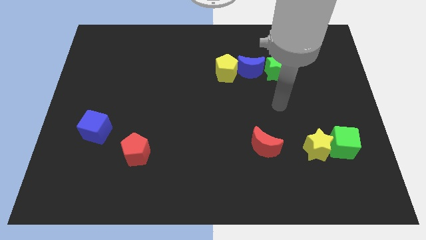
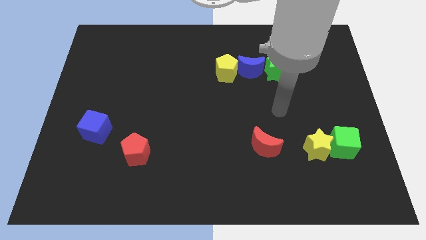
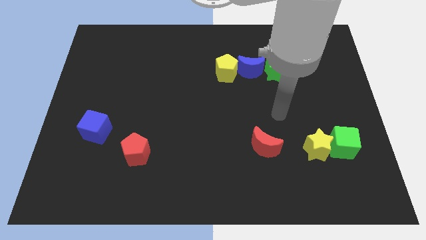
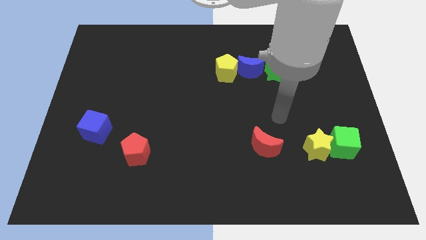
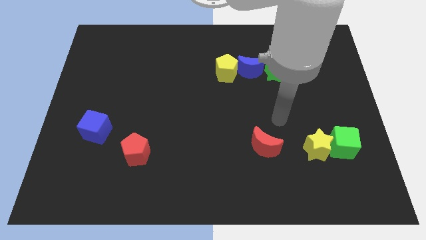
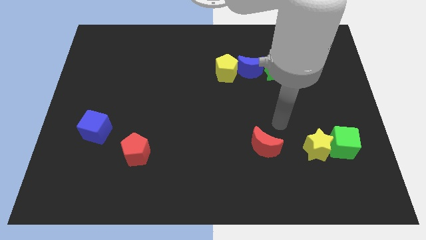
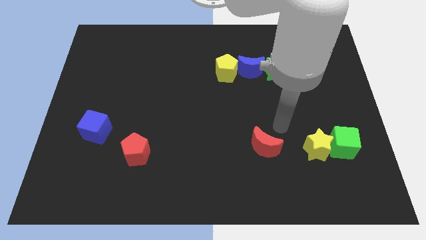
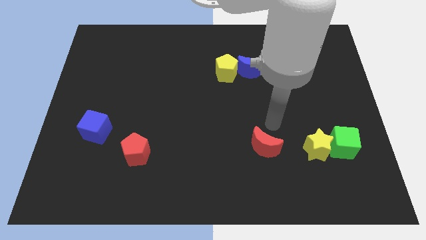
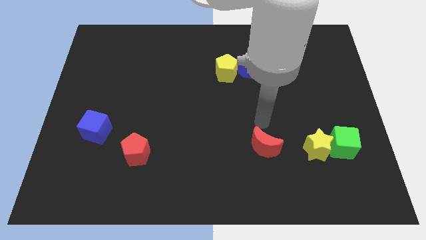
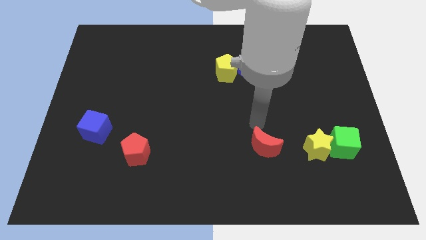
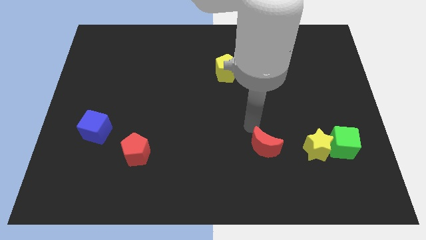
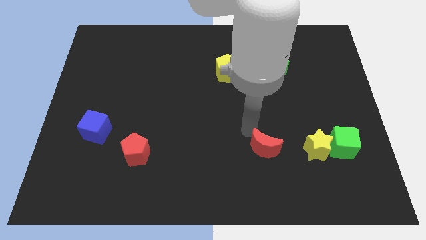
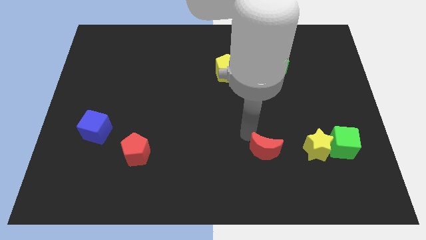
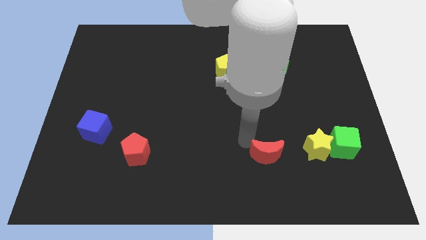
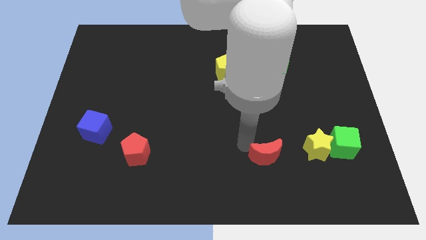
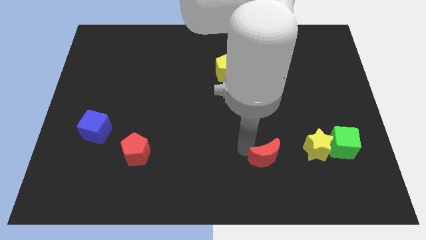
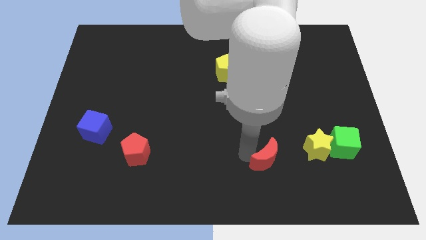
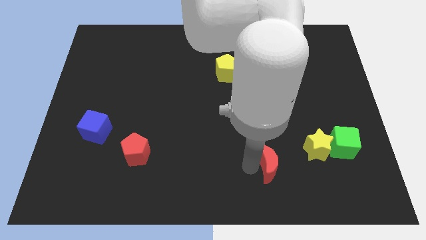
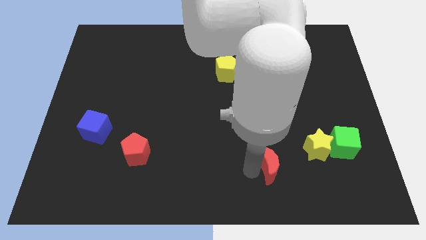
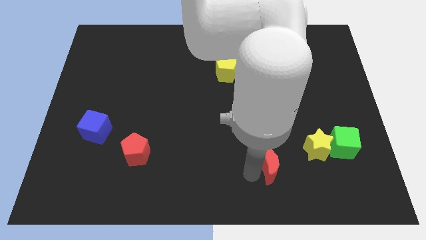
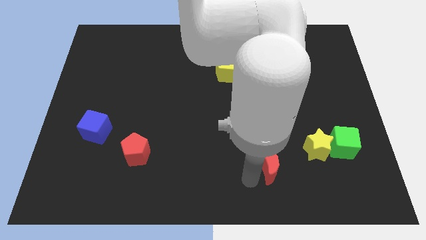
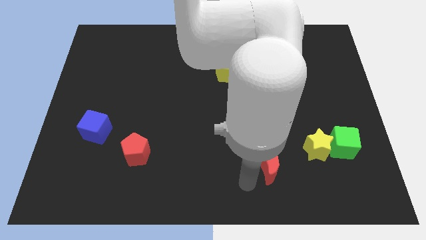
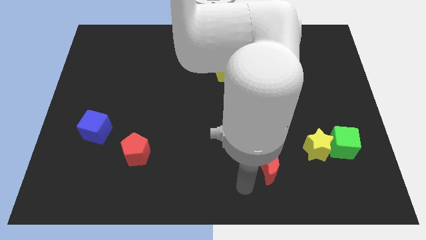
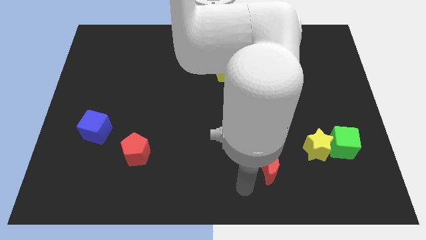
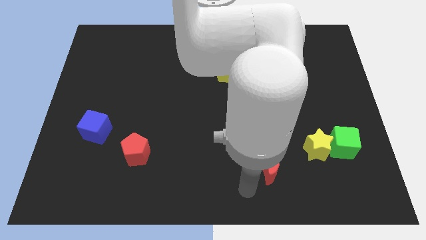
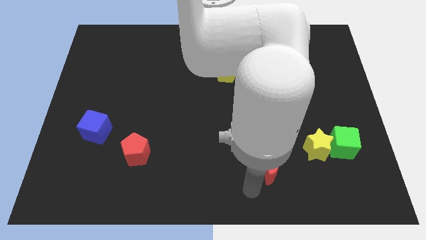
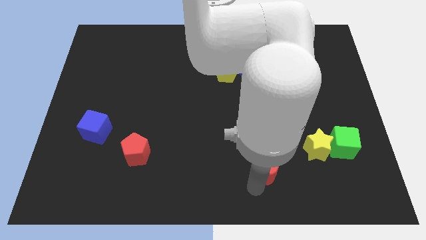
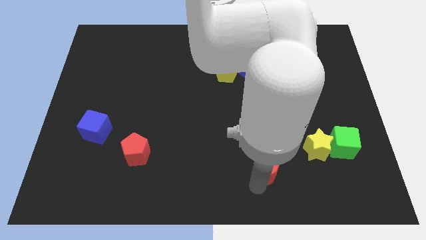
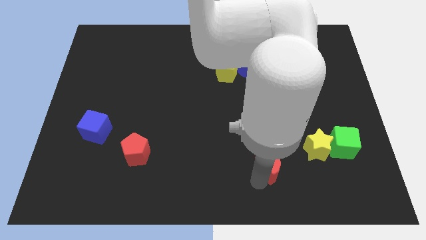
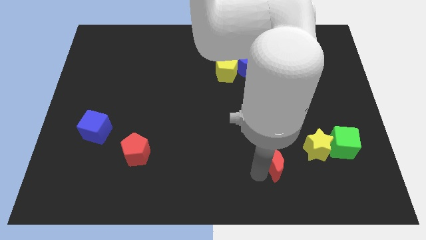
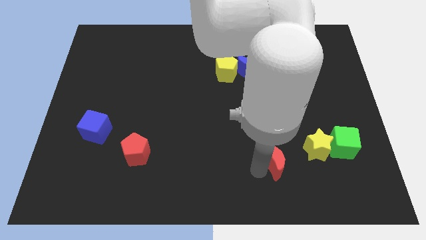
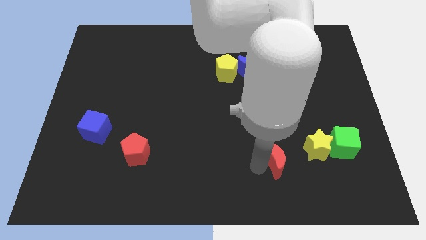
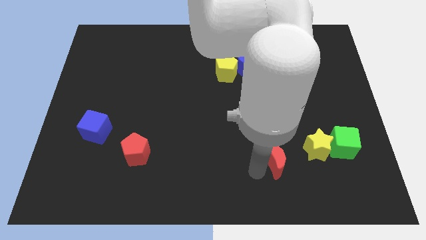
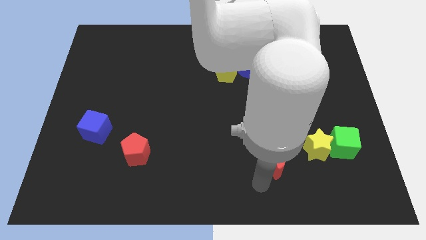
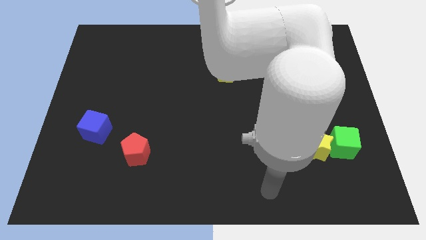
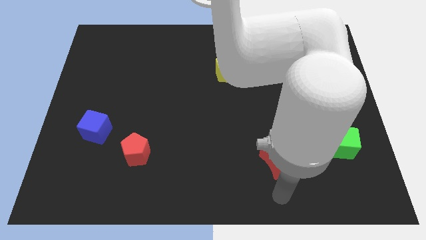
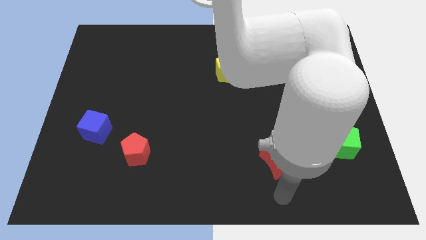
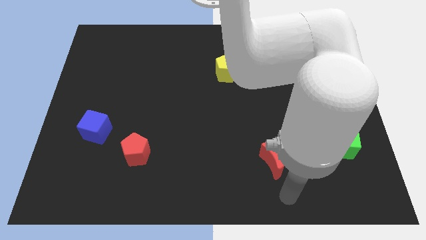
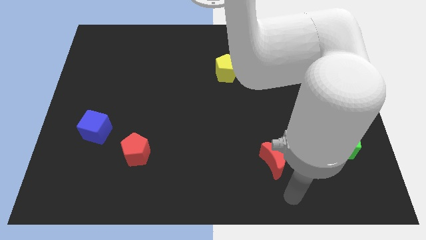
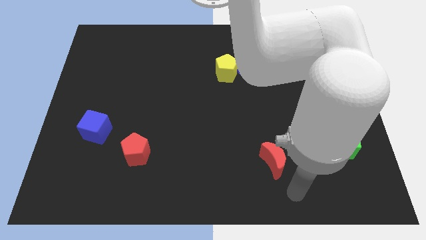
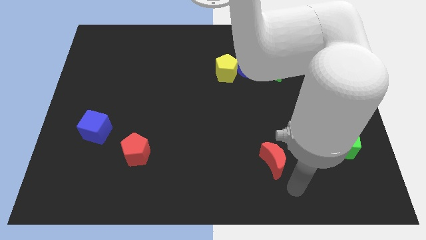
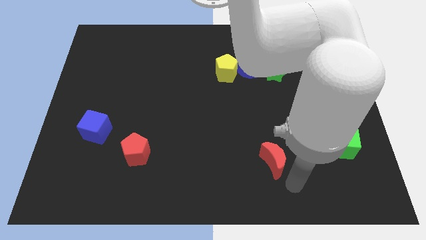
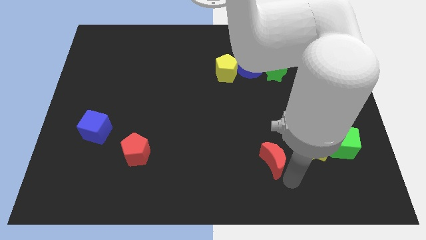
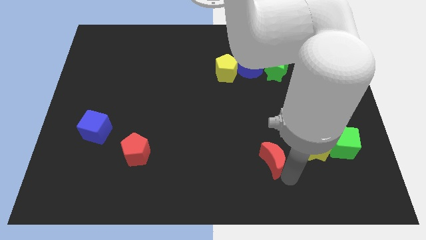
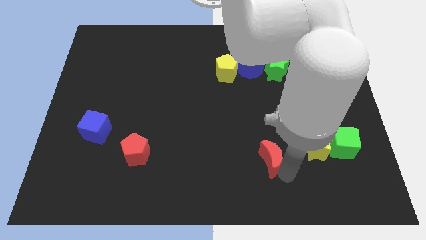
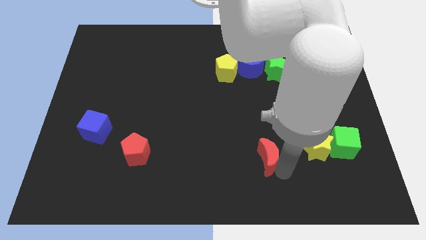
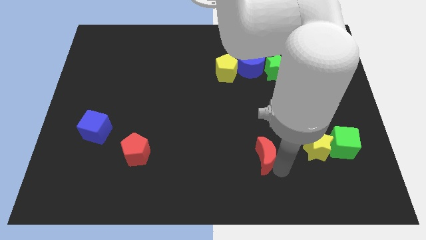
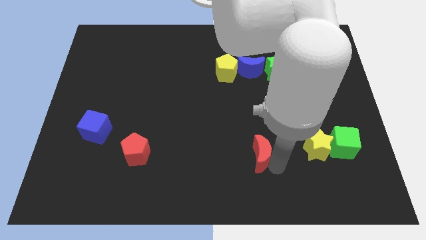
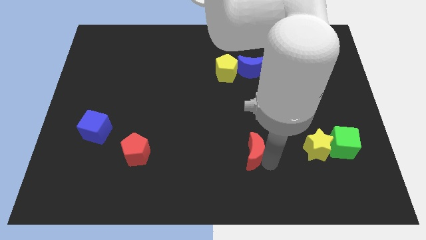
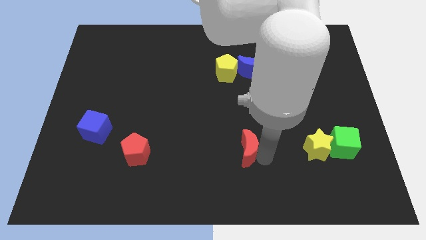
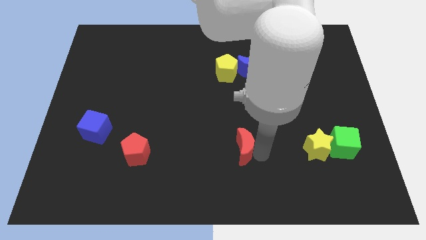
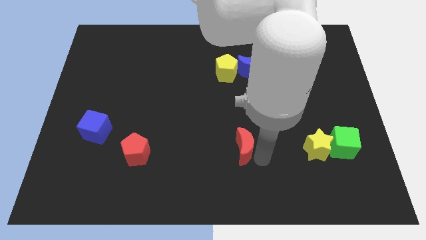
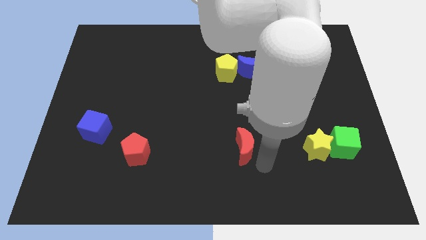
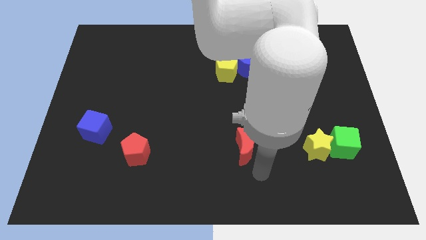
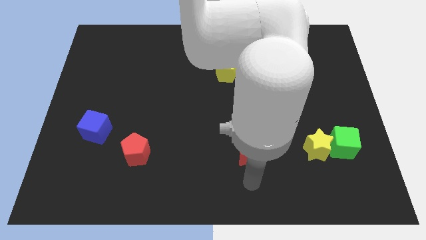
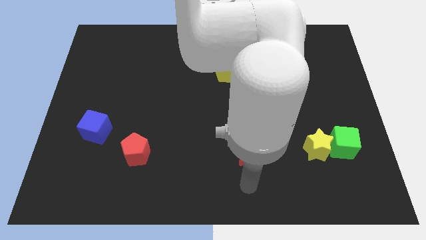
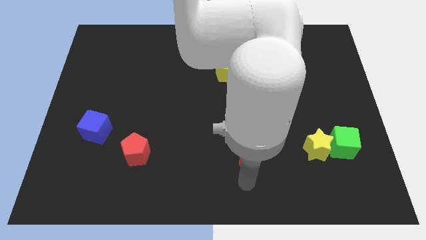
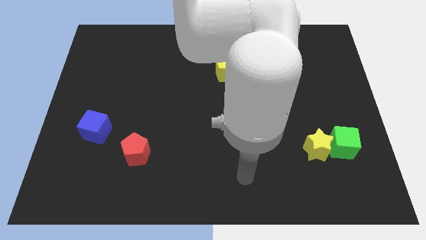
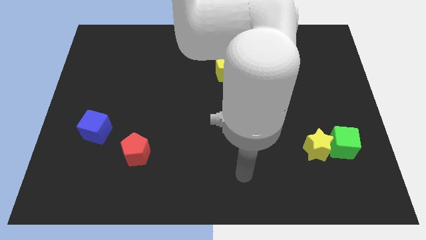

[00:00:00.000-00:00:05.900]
move the red moon to the center of the board

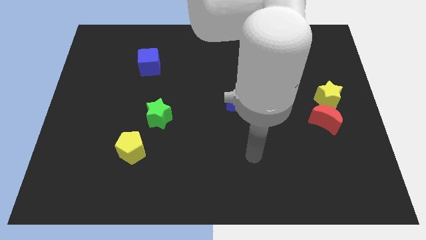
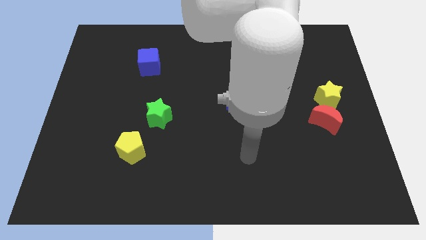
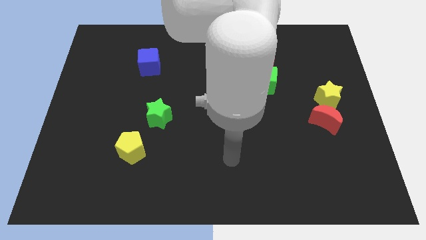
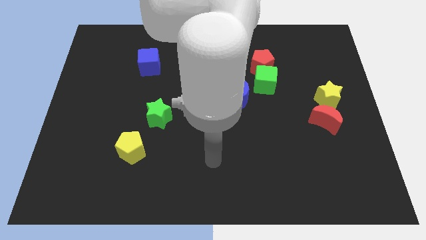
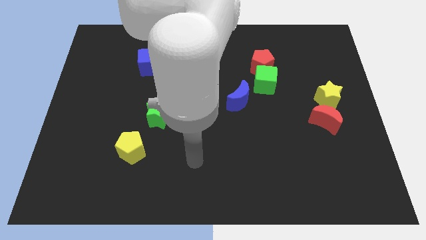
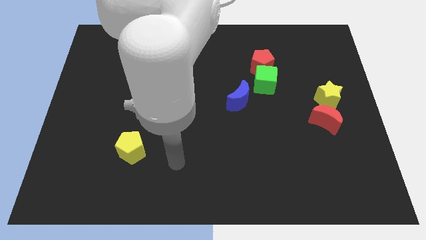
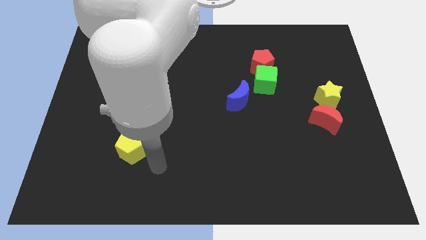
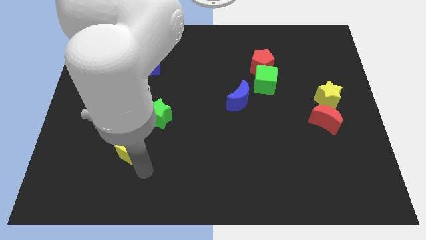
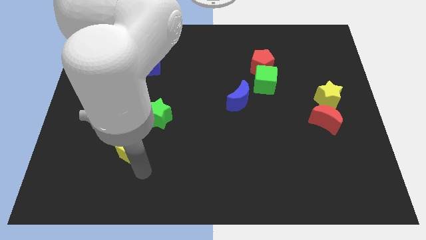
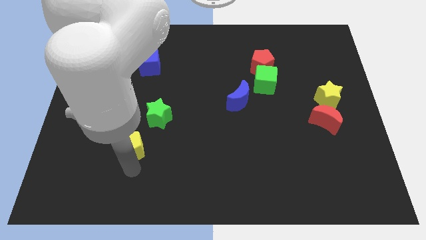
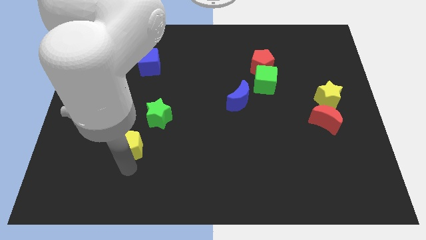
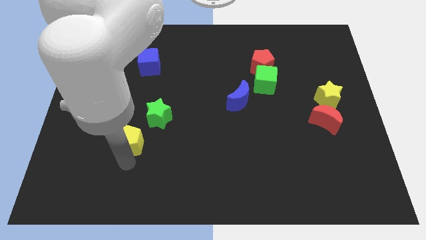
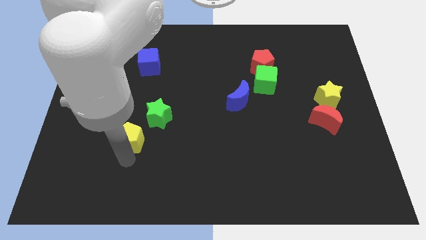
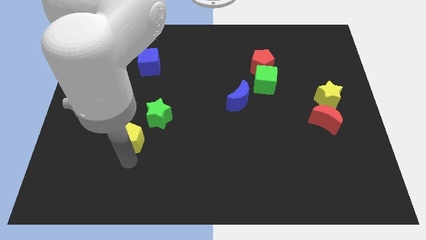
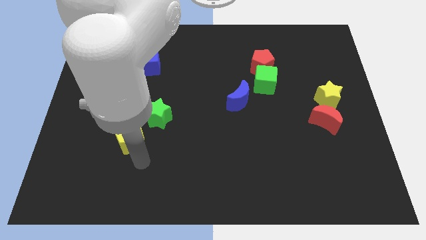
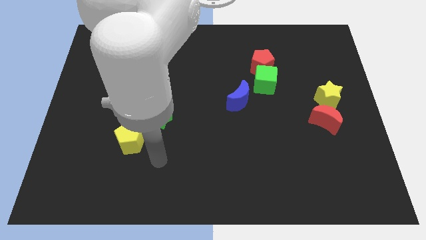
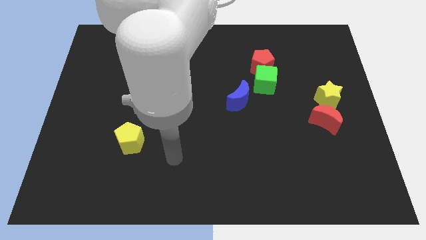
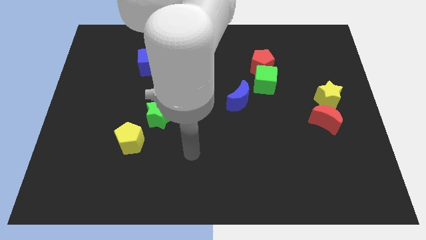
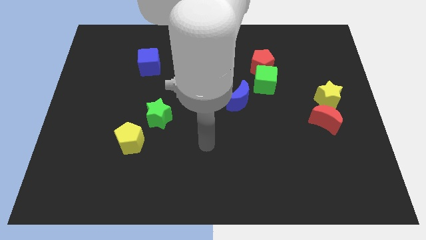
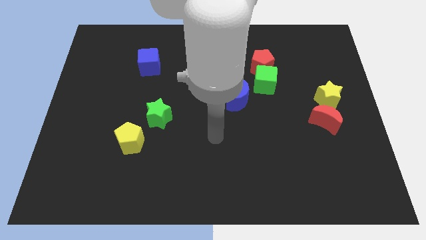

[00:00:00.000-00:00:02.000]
slightly move the yellow pentagon to the top of the board

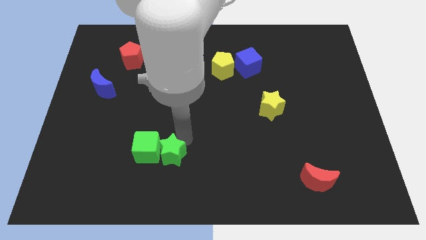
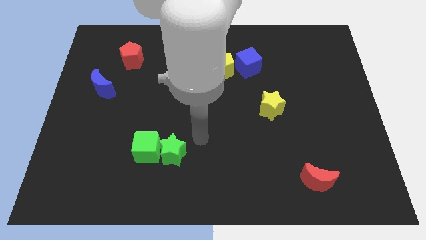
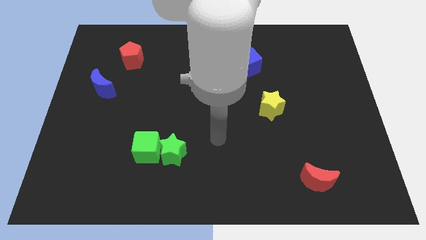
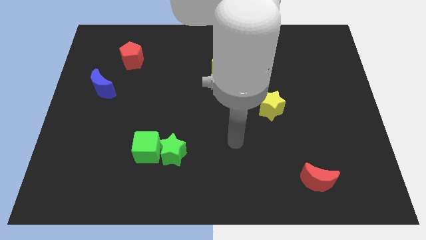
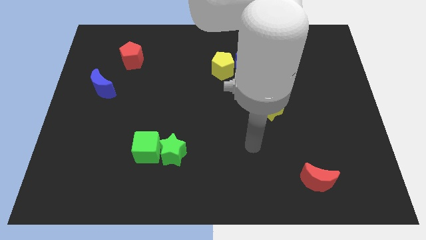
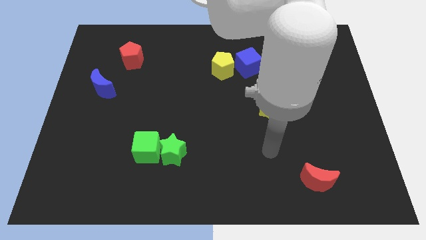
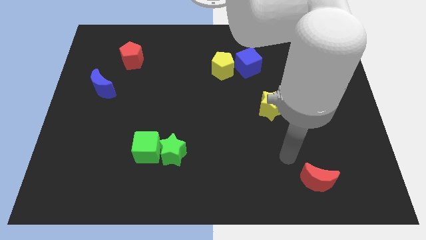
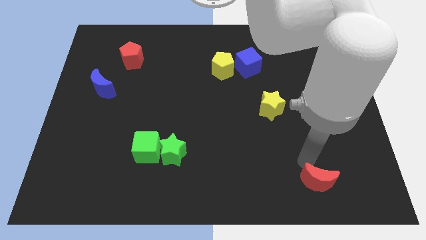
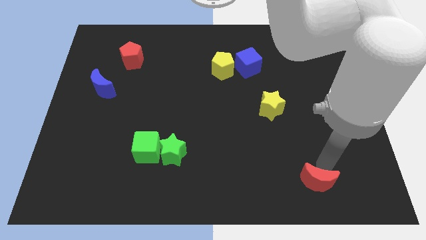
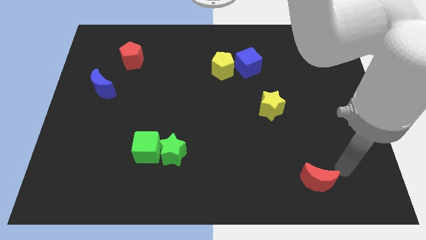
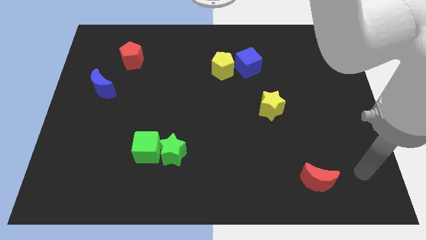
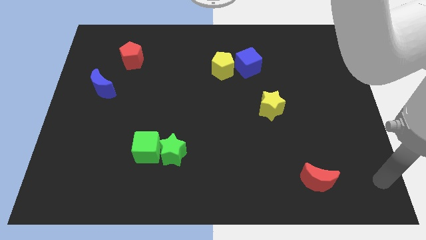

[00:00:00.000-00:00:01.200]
move your arm away from the green star
